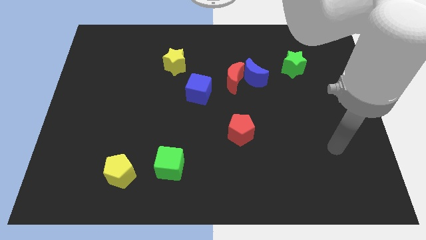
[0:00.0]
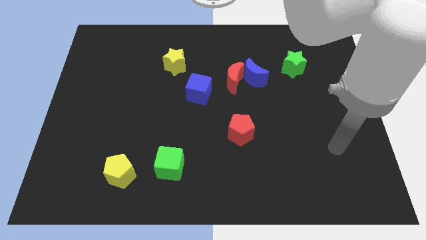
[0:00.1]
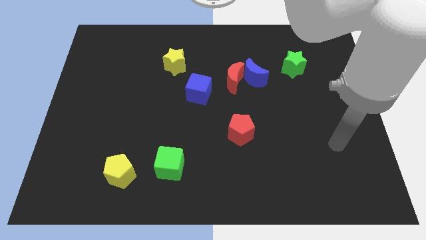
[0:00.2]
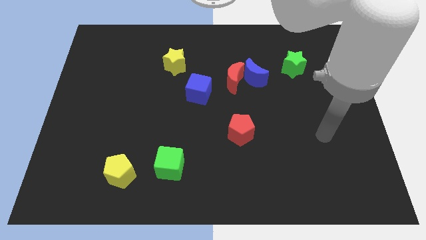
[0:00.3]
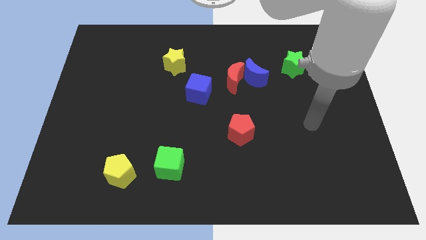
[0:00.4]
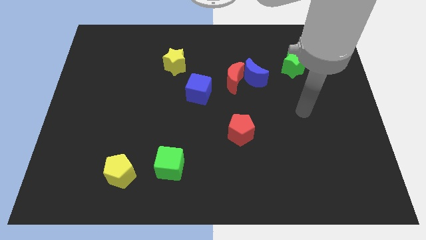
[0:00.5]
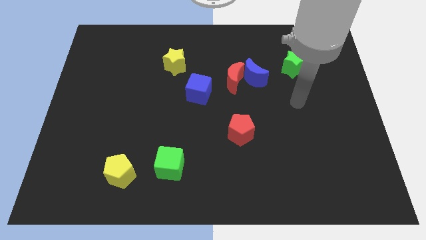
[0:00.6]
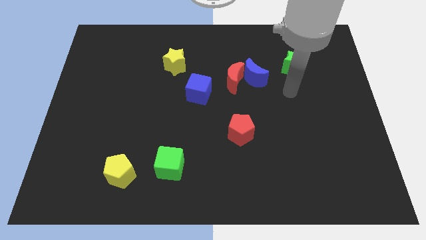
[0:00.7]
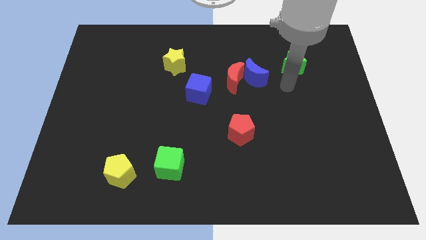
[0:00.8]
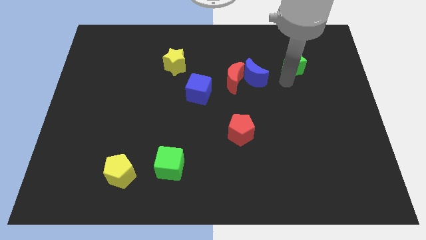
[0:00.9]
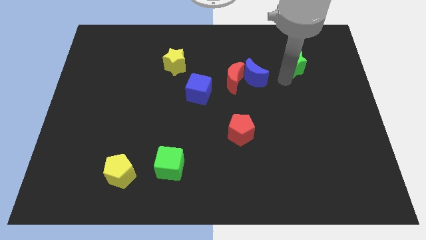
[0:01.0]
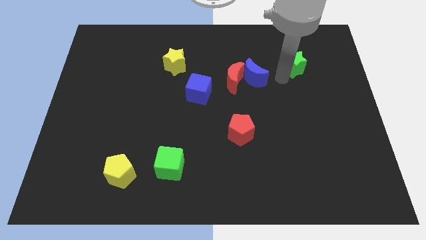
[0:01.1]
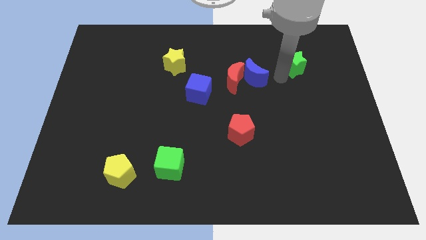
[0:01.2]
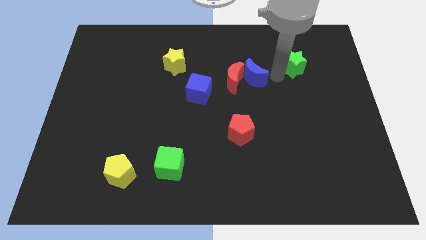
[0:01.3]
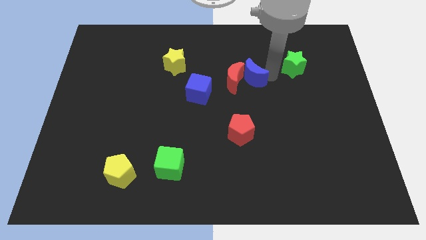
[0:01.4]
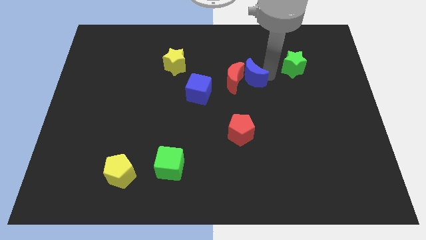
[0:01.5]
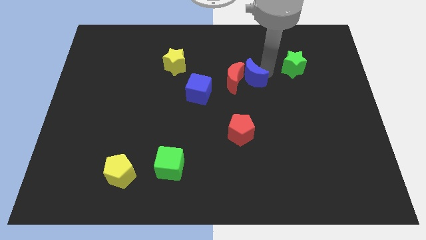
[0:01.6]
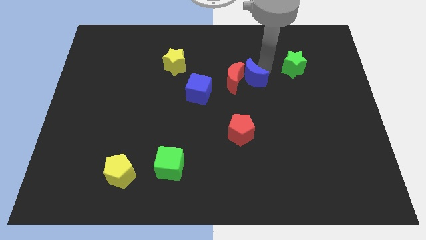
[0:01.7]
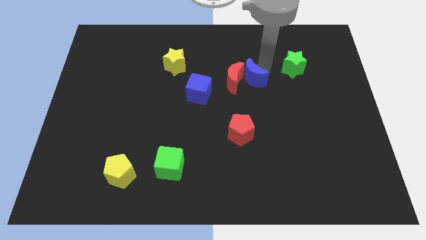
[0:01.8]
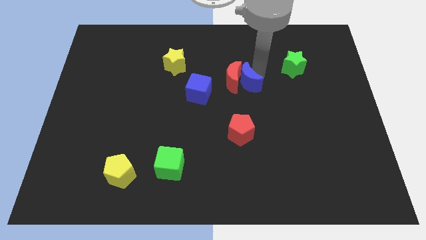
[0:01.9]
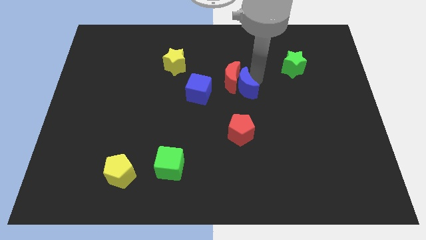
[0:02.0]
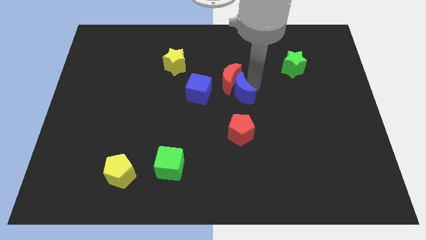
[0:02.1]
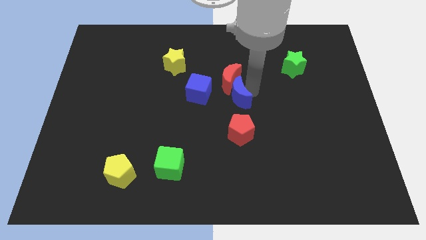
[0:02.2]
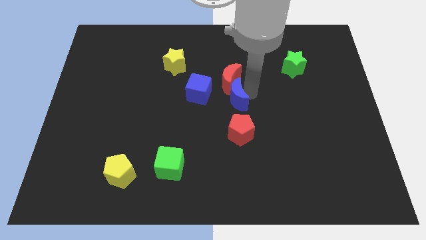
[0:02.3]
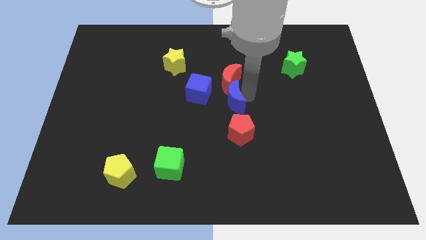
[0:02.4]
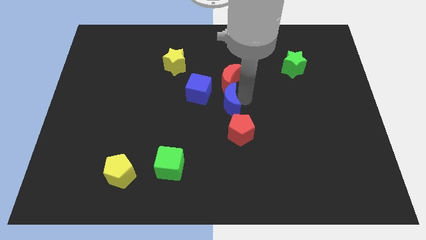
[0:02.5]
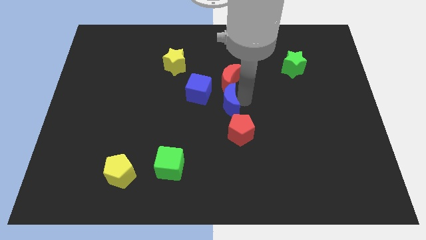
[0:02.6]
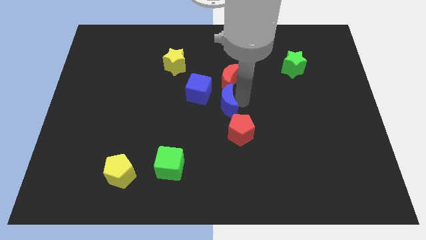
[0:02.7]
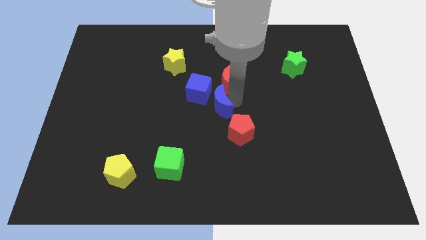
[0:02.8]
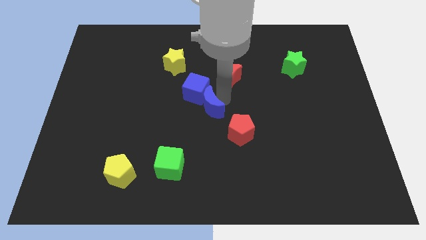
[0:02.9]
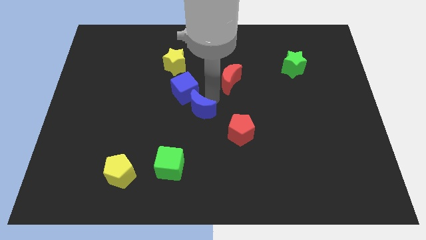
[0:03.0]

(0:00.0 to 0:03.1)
slide the blue moon to the center of the table

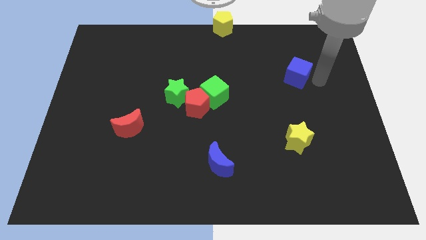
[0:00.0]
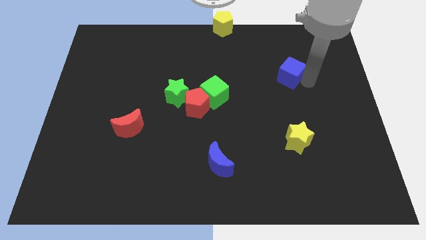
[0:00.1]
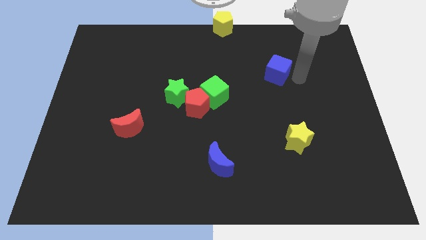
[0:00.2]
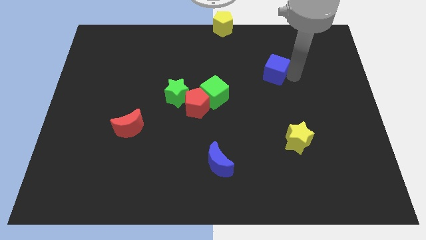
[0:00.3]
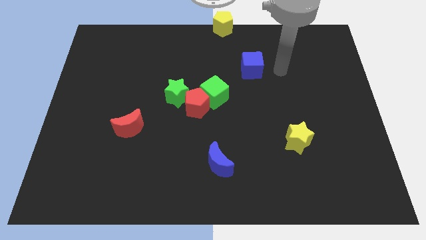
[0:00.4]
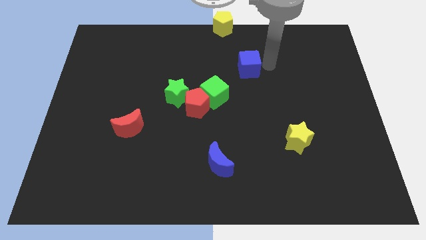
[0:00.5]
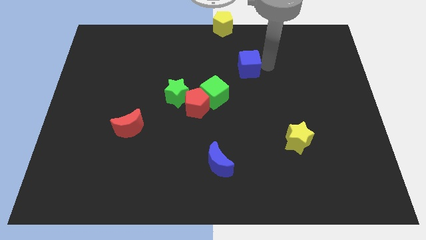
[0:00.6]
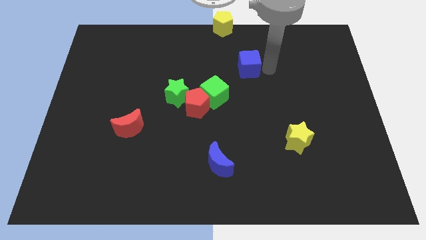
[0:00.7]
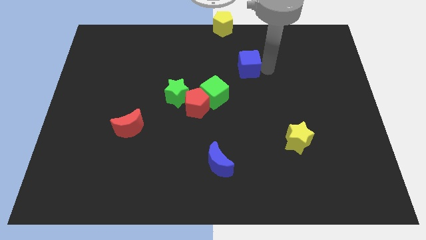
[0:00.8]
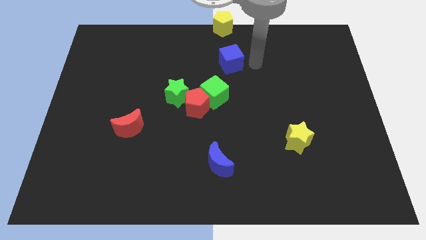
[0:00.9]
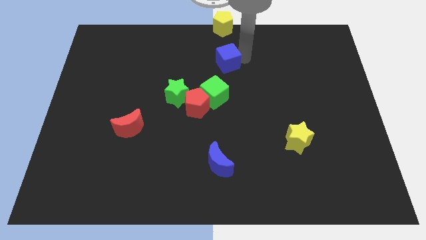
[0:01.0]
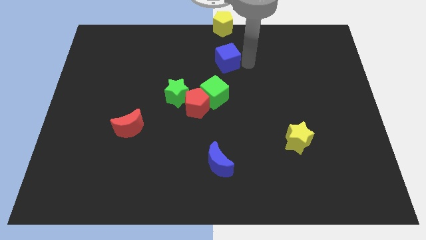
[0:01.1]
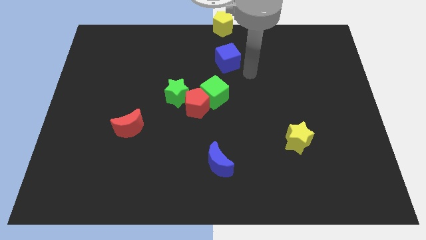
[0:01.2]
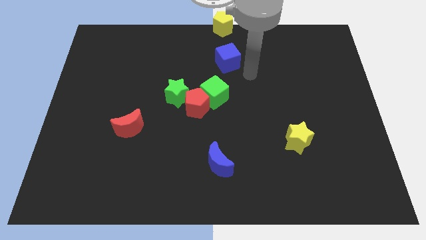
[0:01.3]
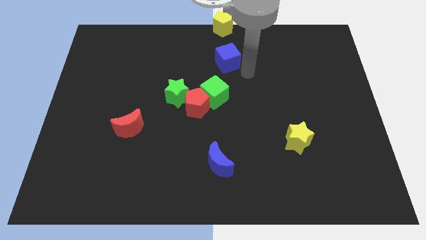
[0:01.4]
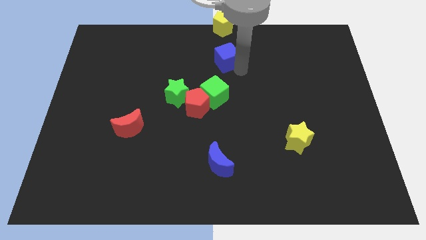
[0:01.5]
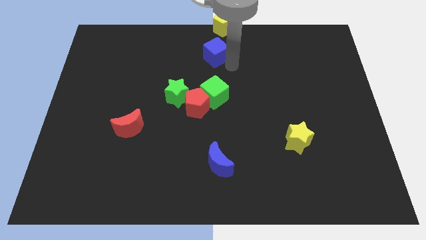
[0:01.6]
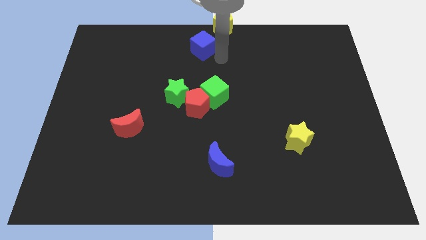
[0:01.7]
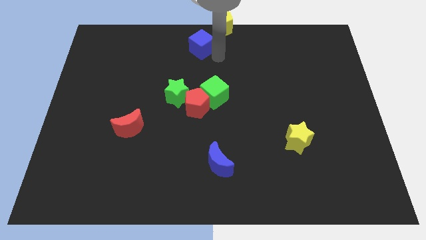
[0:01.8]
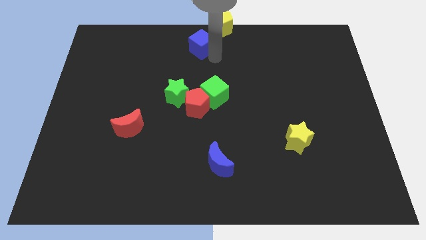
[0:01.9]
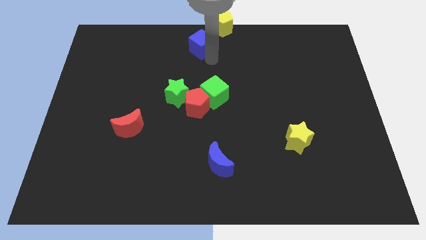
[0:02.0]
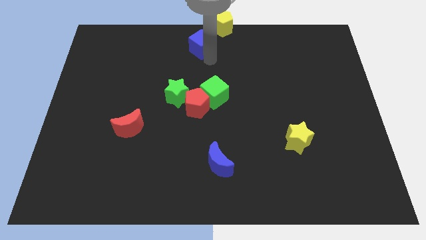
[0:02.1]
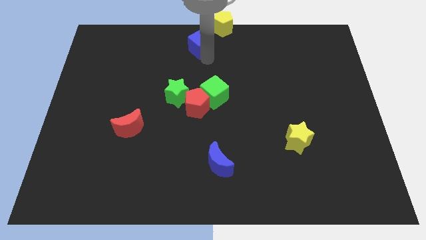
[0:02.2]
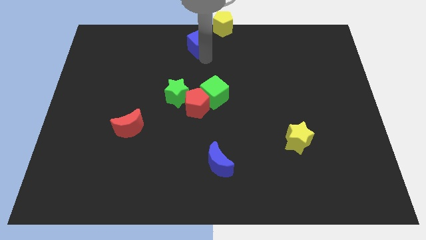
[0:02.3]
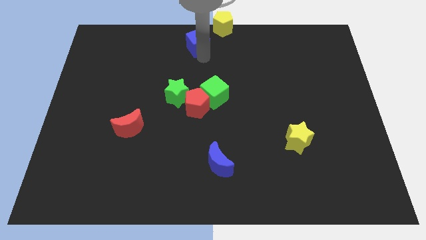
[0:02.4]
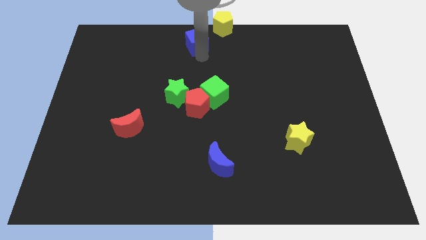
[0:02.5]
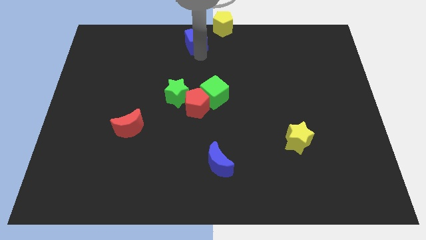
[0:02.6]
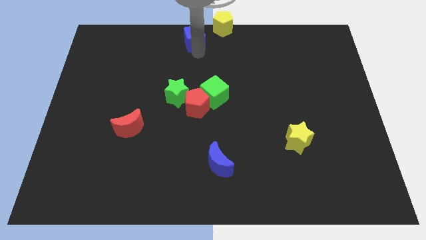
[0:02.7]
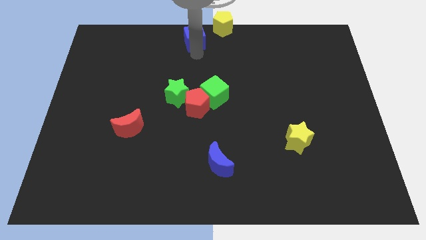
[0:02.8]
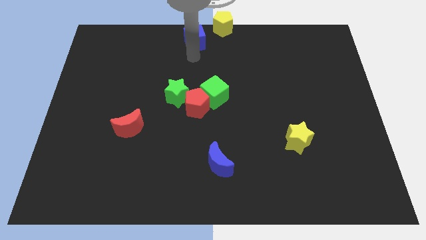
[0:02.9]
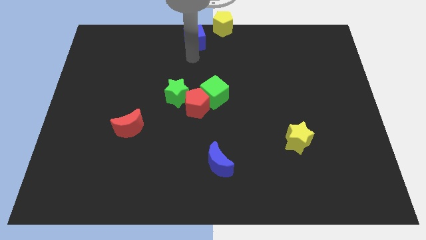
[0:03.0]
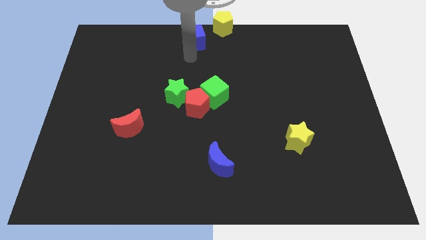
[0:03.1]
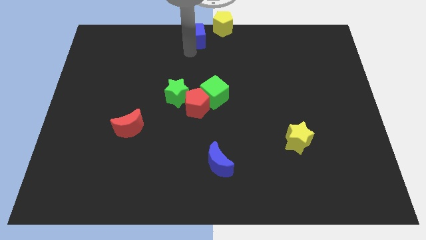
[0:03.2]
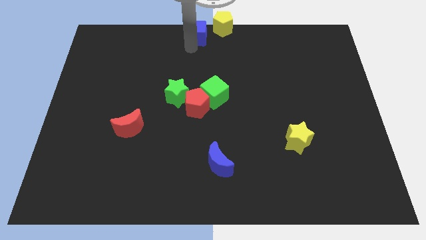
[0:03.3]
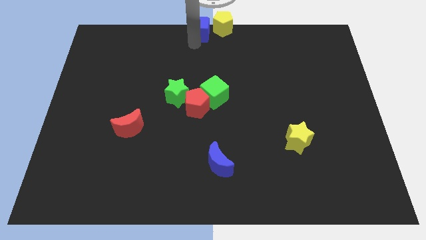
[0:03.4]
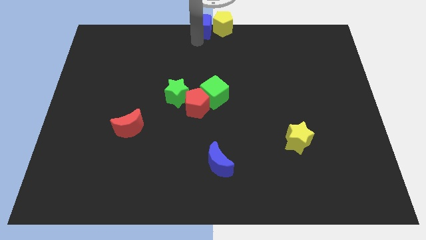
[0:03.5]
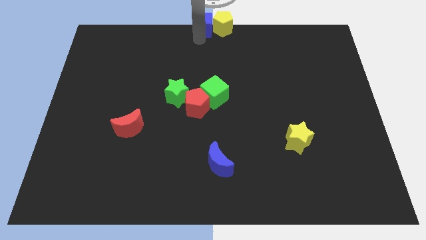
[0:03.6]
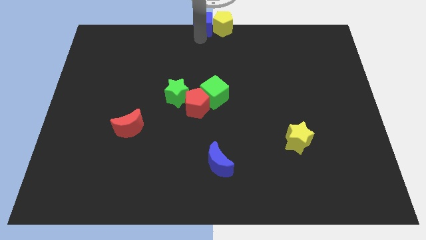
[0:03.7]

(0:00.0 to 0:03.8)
place the blue cube to the left of the yellow pentagon

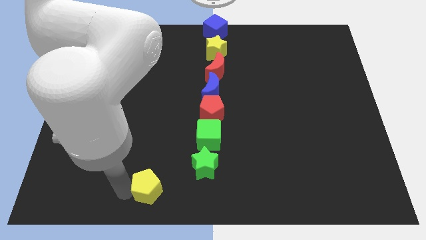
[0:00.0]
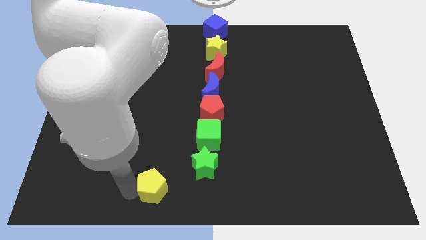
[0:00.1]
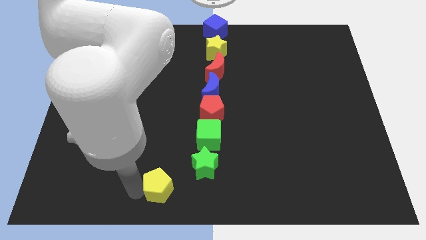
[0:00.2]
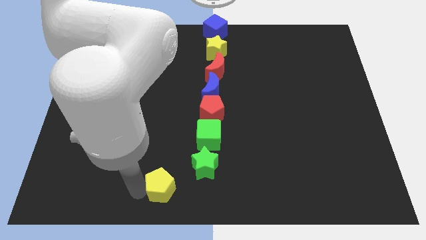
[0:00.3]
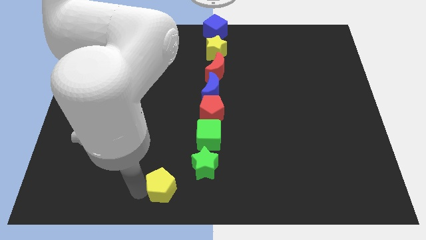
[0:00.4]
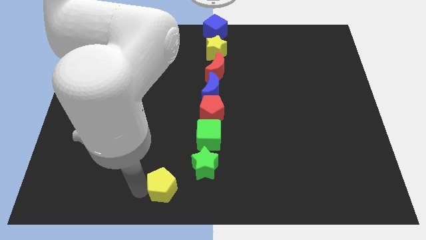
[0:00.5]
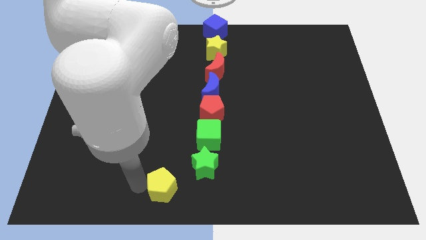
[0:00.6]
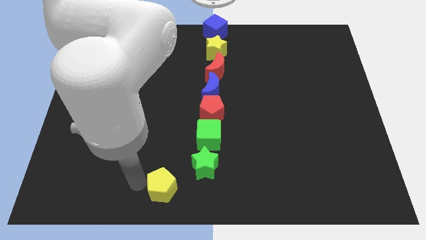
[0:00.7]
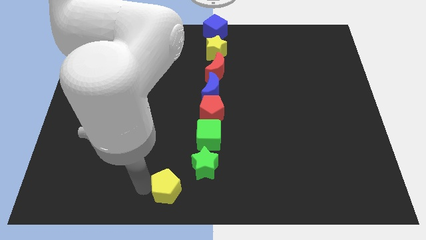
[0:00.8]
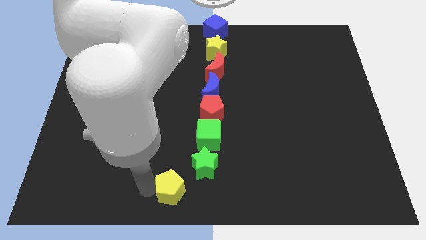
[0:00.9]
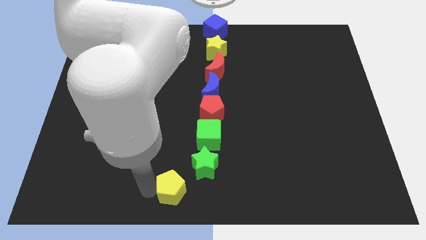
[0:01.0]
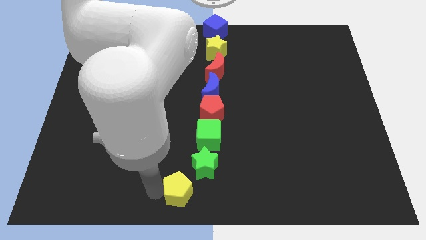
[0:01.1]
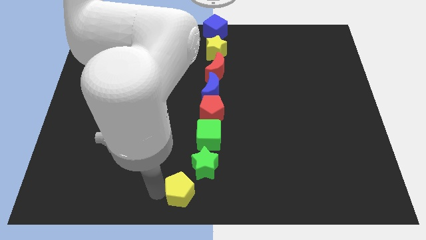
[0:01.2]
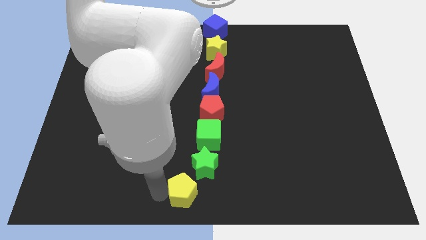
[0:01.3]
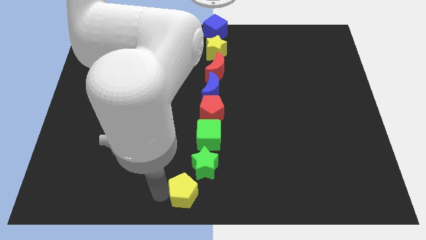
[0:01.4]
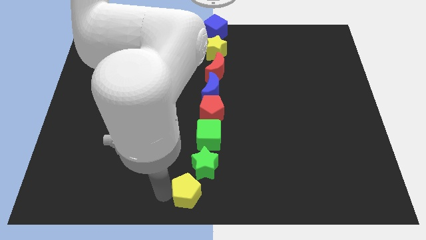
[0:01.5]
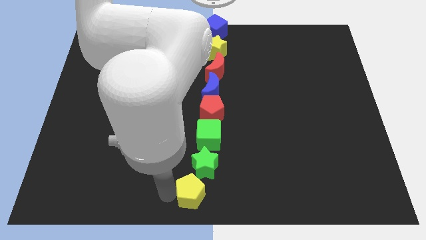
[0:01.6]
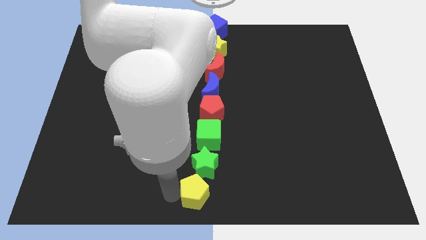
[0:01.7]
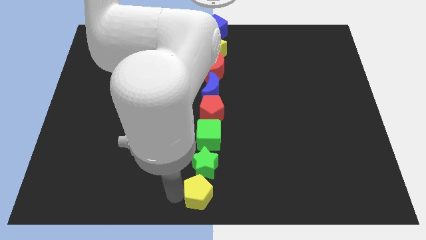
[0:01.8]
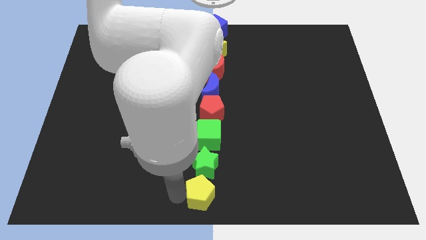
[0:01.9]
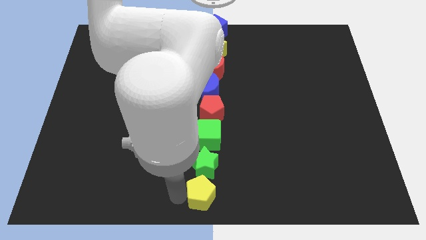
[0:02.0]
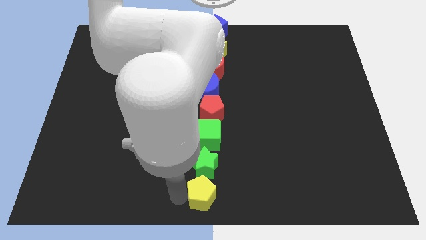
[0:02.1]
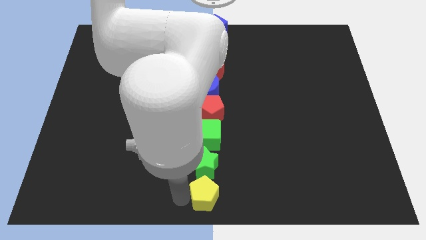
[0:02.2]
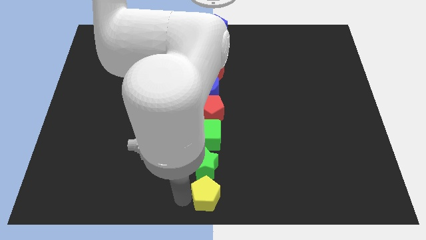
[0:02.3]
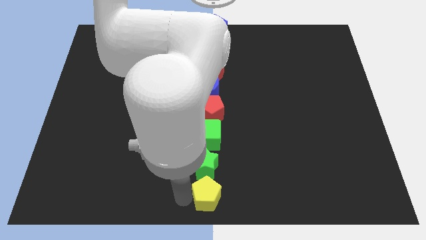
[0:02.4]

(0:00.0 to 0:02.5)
move the yellow pentagon below the green star to form a vertical line
